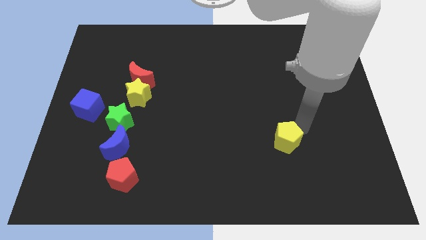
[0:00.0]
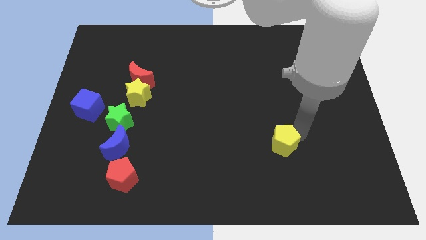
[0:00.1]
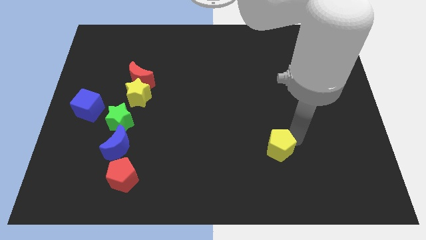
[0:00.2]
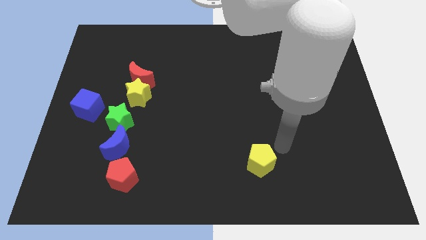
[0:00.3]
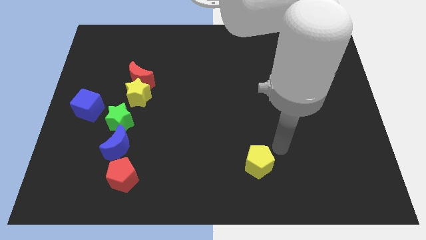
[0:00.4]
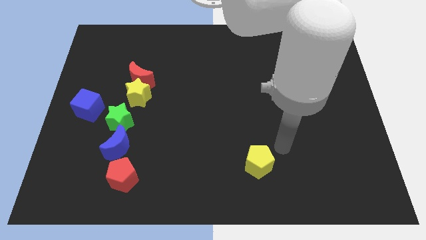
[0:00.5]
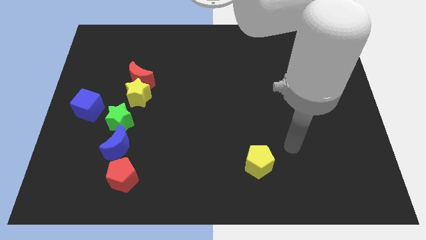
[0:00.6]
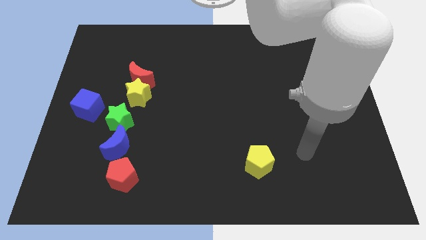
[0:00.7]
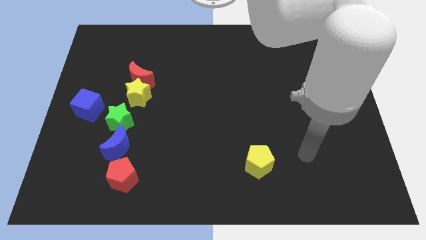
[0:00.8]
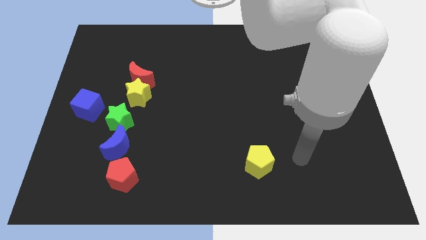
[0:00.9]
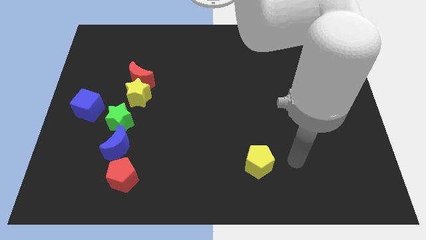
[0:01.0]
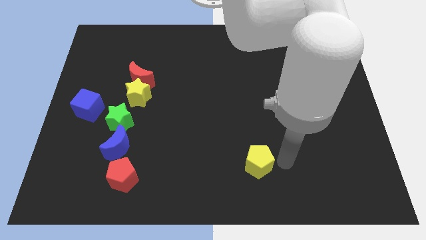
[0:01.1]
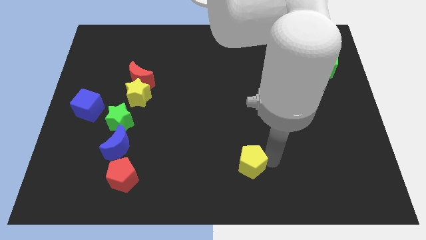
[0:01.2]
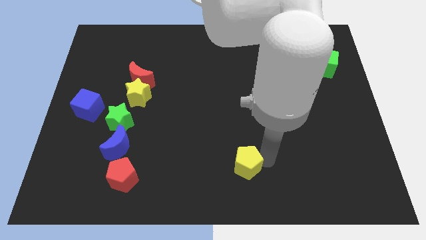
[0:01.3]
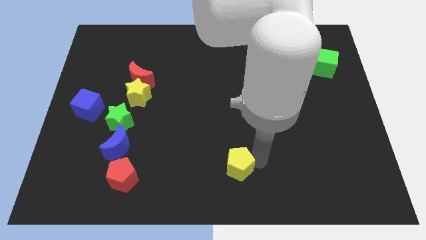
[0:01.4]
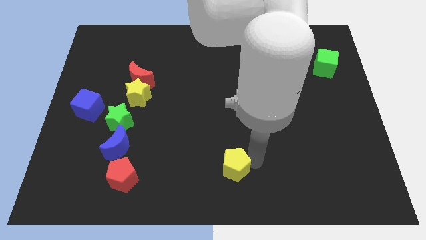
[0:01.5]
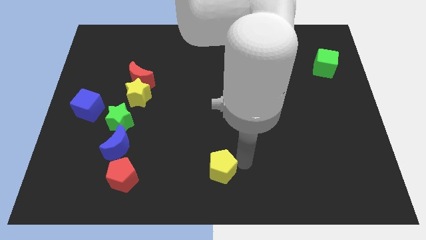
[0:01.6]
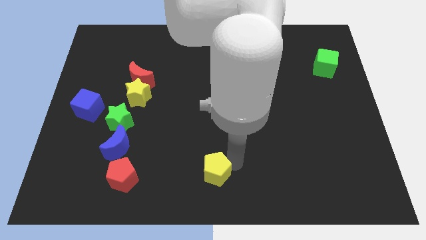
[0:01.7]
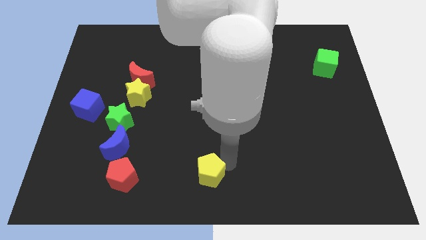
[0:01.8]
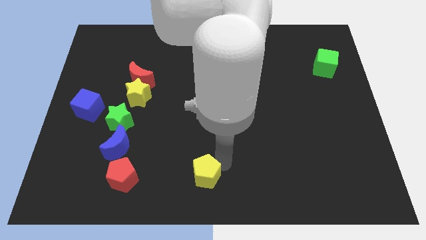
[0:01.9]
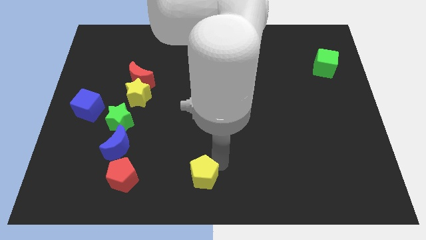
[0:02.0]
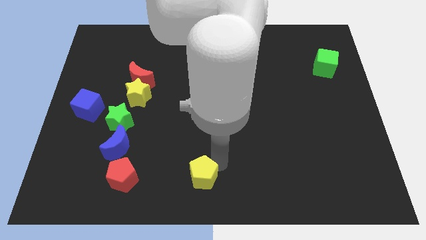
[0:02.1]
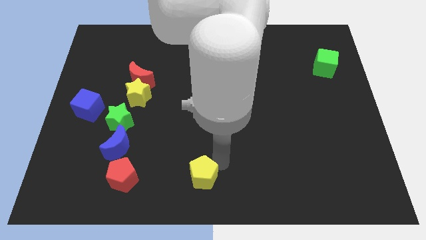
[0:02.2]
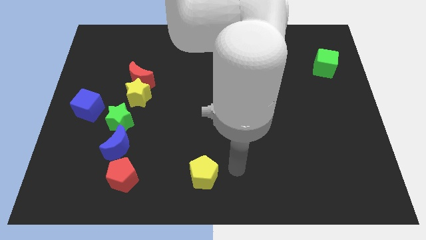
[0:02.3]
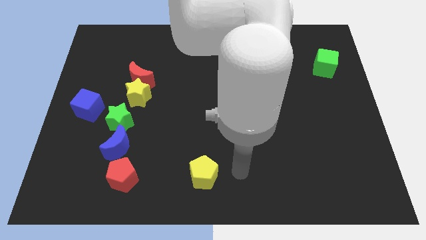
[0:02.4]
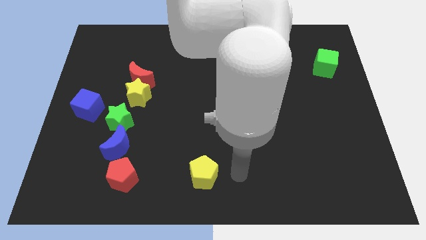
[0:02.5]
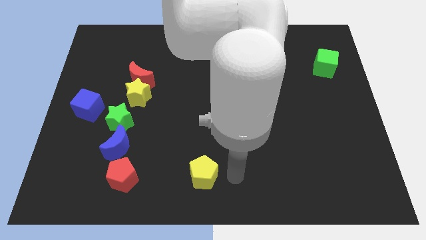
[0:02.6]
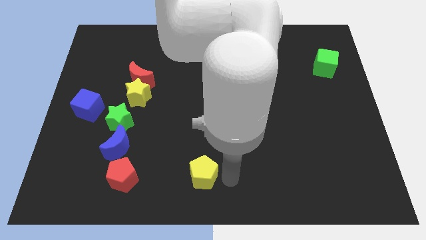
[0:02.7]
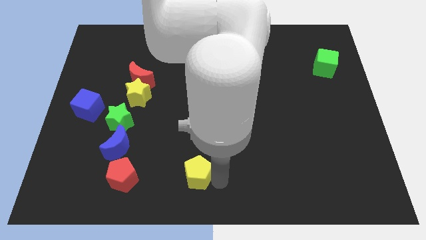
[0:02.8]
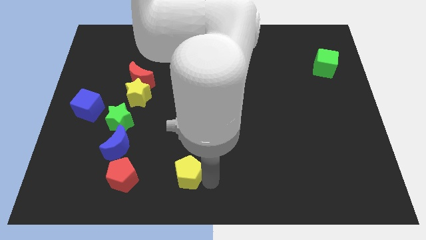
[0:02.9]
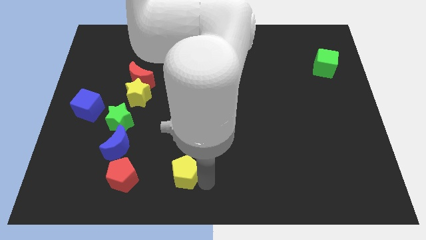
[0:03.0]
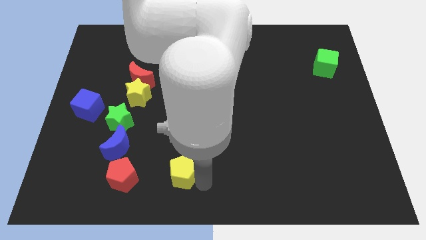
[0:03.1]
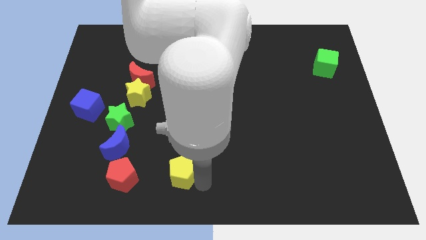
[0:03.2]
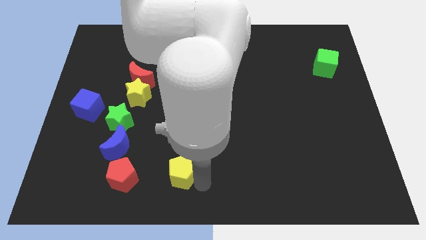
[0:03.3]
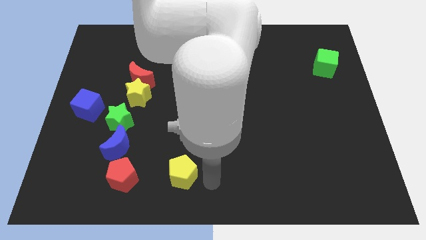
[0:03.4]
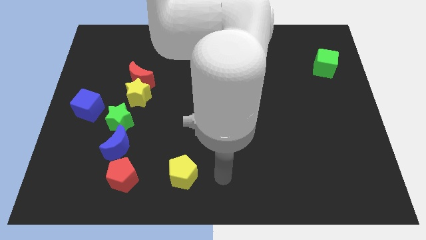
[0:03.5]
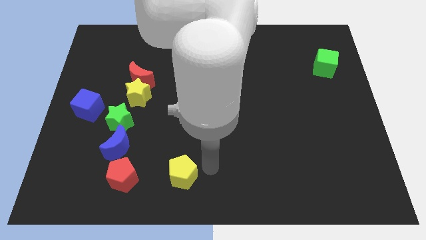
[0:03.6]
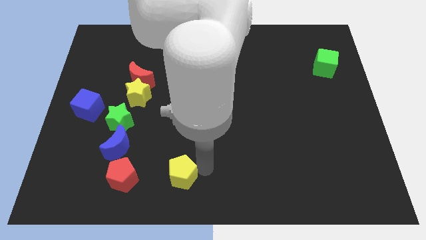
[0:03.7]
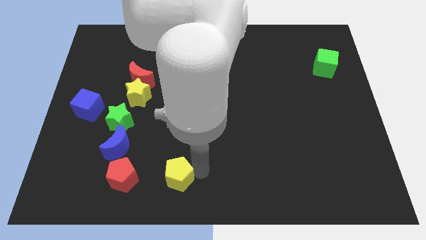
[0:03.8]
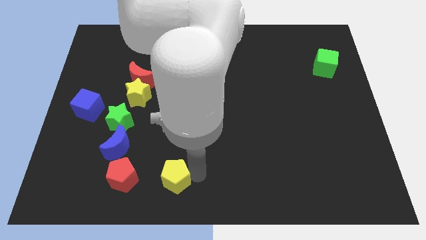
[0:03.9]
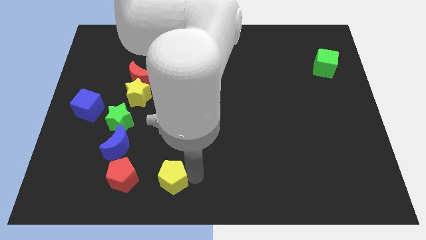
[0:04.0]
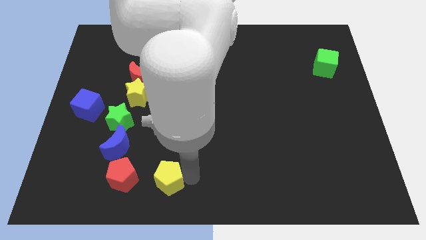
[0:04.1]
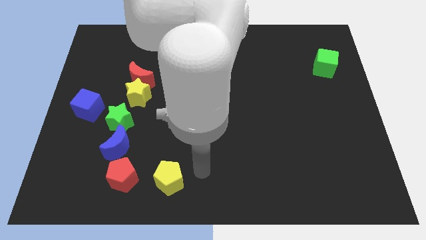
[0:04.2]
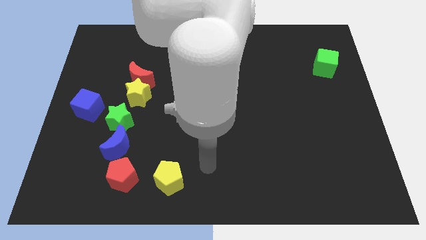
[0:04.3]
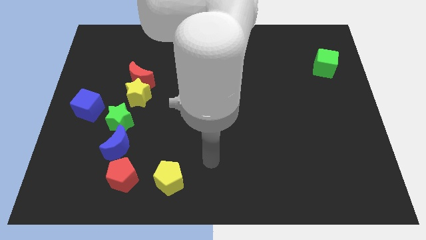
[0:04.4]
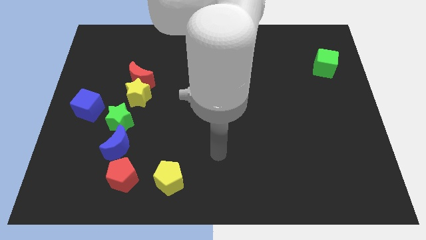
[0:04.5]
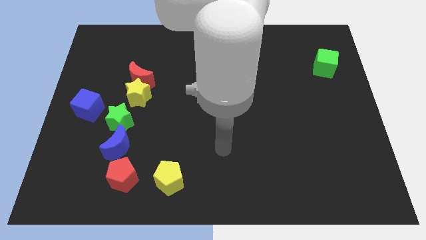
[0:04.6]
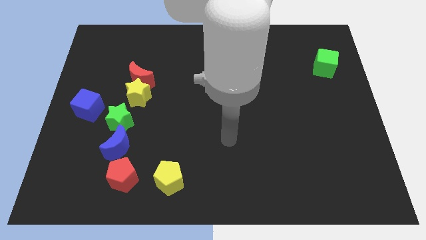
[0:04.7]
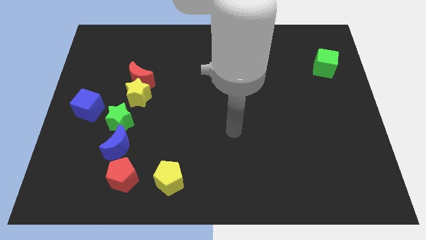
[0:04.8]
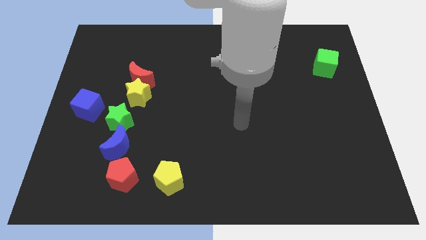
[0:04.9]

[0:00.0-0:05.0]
place the yellow penatgon to right side of red pentagon

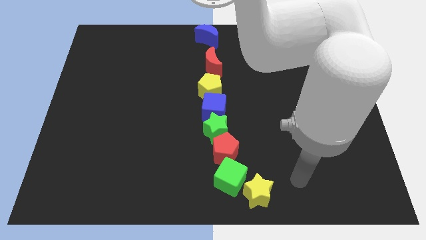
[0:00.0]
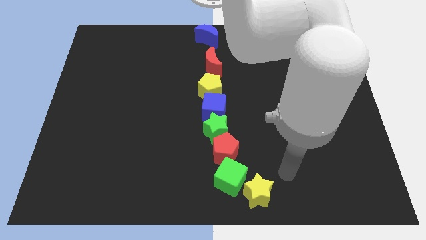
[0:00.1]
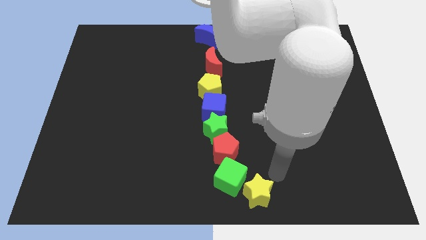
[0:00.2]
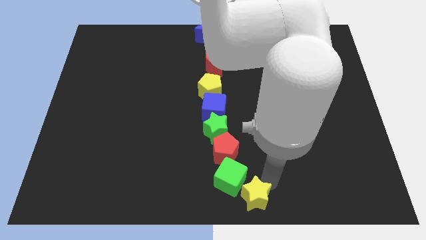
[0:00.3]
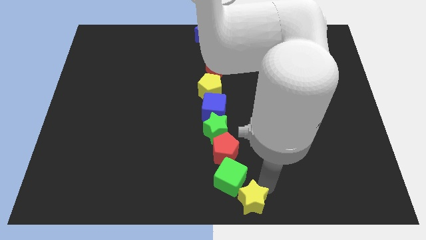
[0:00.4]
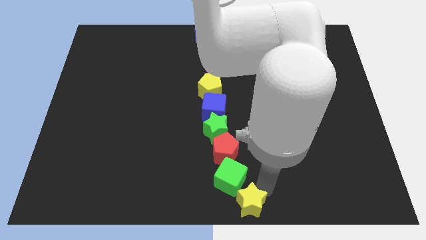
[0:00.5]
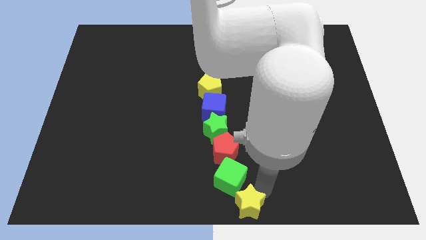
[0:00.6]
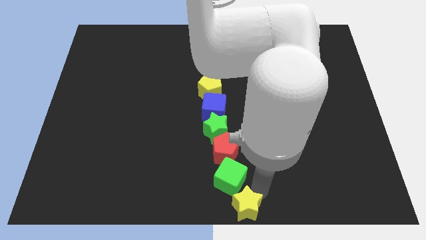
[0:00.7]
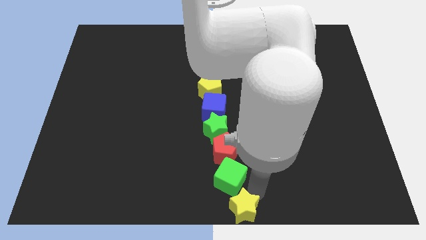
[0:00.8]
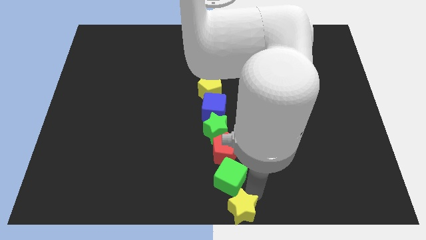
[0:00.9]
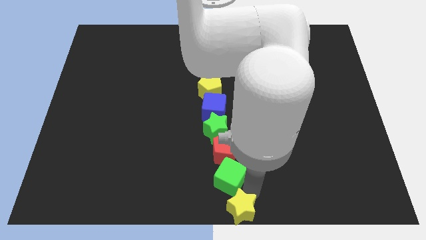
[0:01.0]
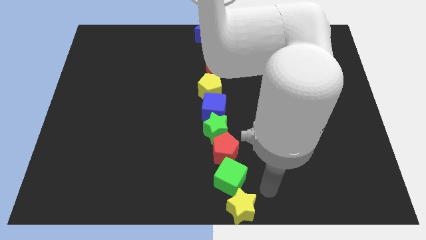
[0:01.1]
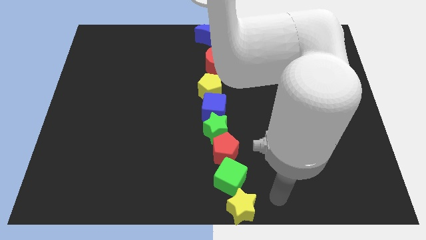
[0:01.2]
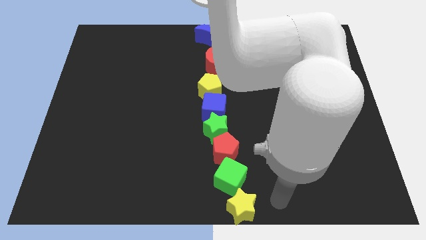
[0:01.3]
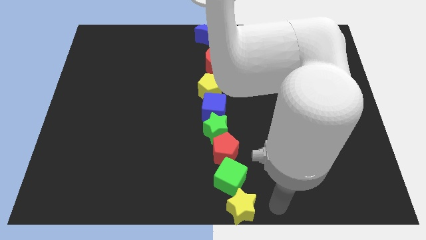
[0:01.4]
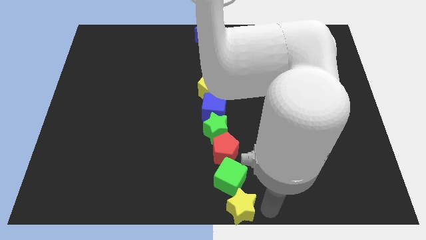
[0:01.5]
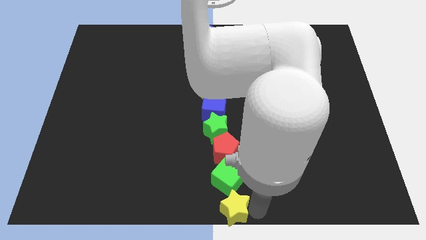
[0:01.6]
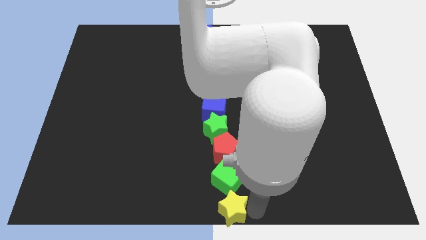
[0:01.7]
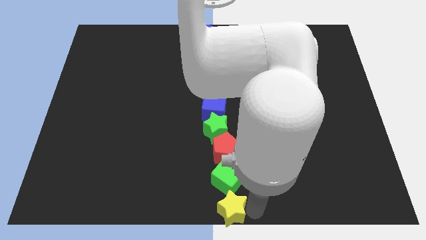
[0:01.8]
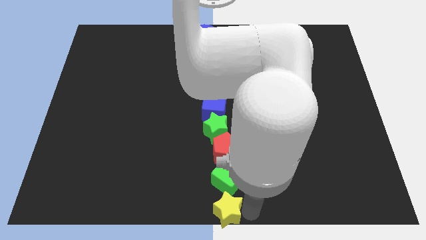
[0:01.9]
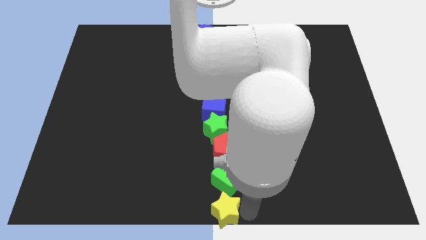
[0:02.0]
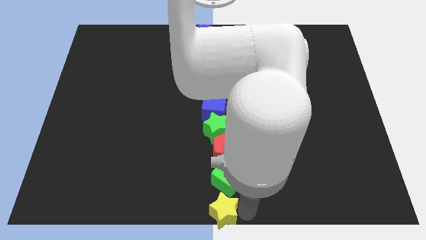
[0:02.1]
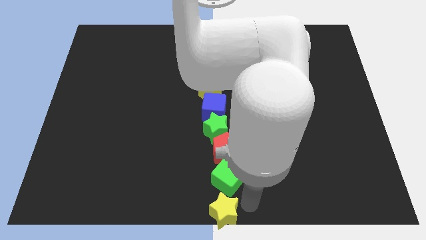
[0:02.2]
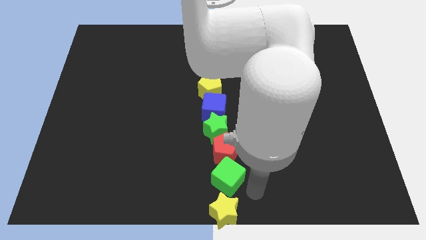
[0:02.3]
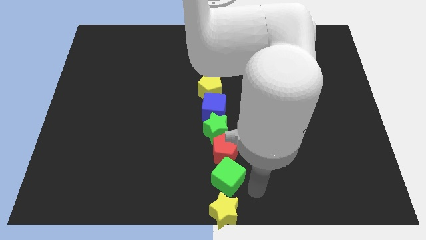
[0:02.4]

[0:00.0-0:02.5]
move yellow star to the bottom of the green cube

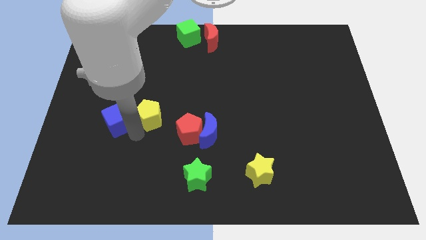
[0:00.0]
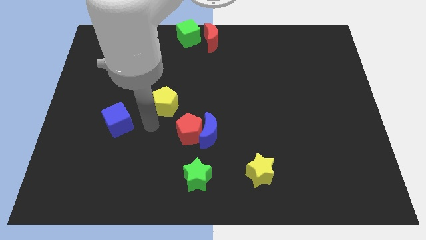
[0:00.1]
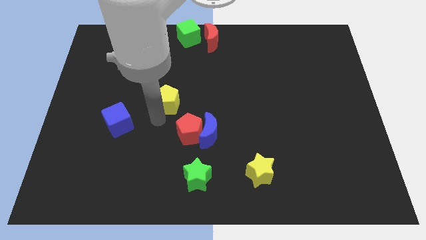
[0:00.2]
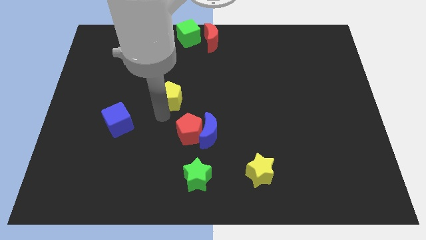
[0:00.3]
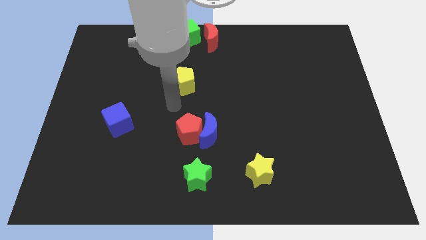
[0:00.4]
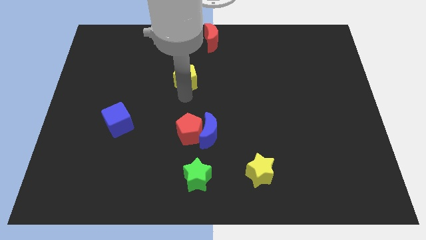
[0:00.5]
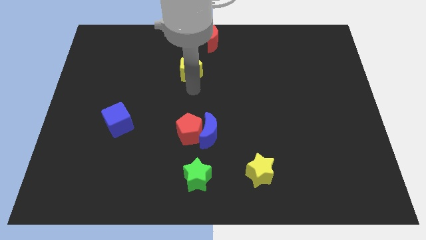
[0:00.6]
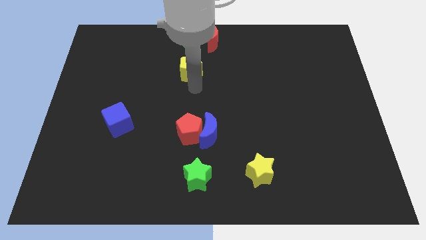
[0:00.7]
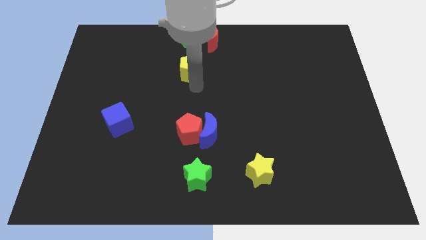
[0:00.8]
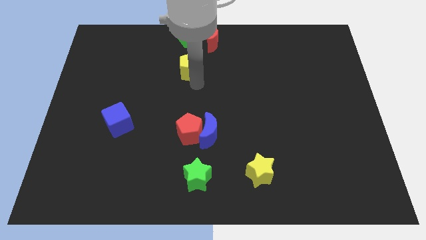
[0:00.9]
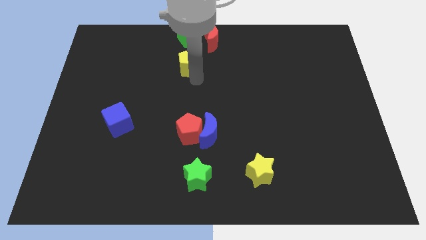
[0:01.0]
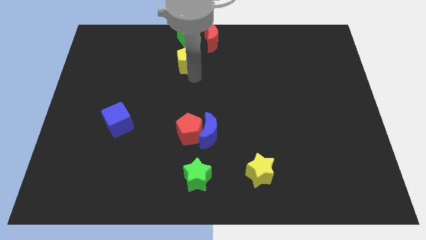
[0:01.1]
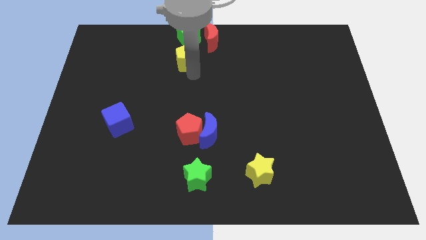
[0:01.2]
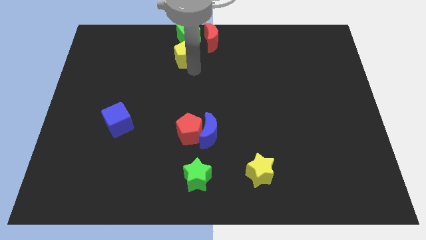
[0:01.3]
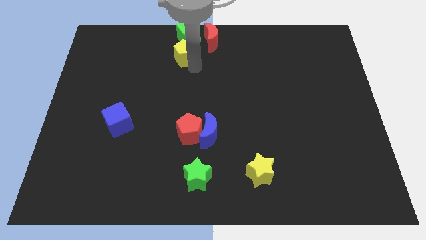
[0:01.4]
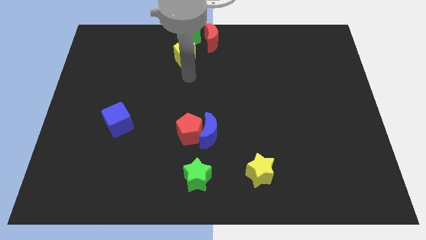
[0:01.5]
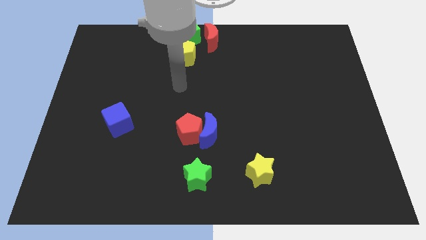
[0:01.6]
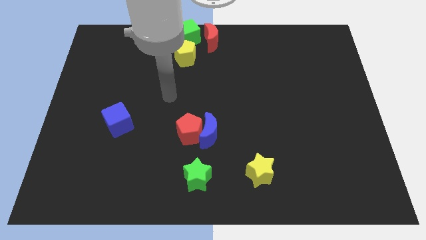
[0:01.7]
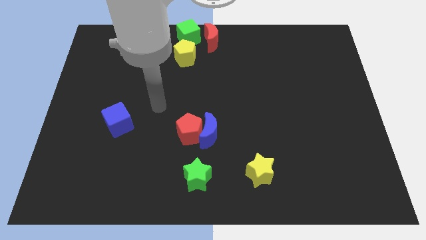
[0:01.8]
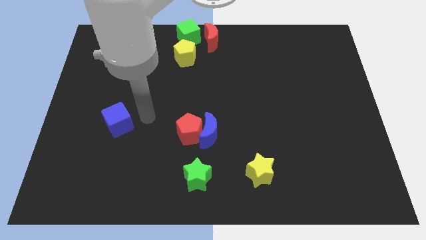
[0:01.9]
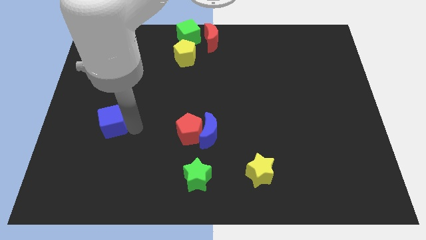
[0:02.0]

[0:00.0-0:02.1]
push the yellow pentagon towards the bottom of the green cube
